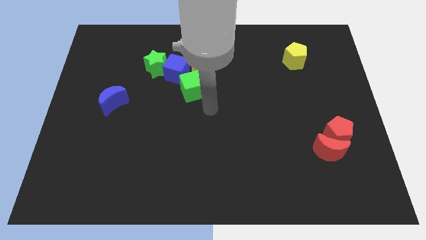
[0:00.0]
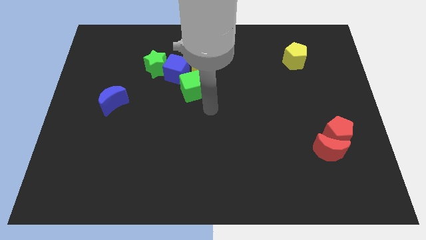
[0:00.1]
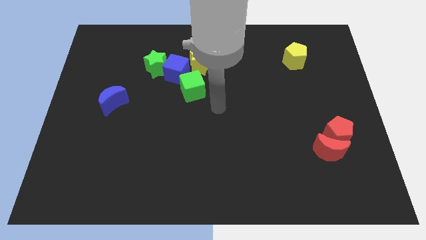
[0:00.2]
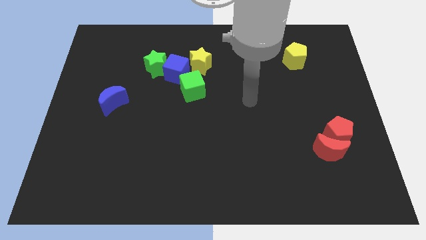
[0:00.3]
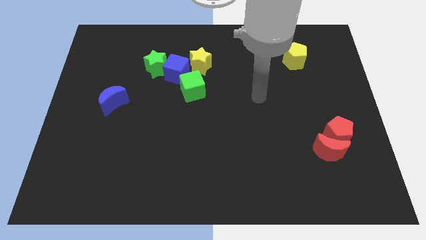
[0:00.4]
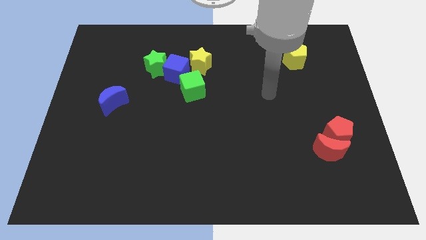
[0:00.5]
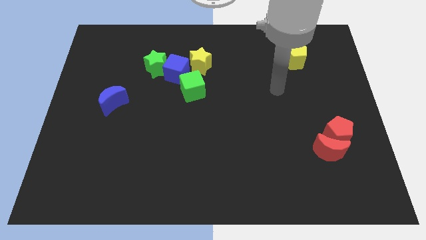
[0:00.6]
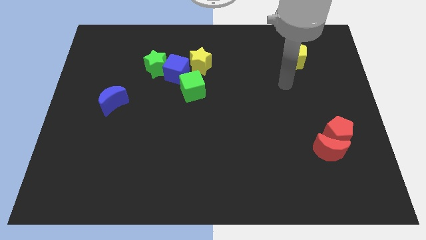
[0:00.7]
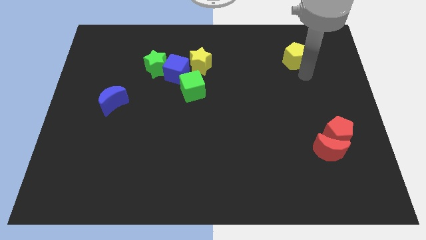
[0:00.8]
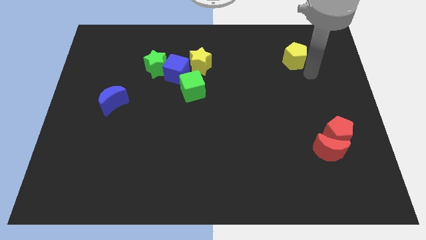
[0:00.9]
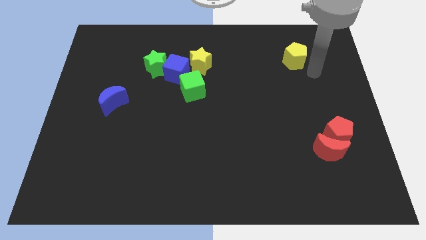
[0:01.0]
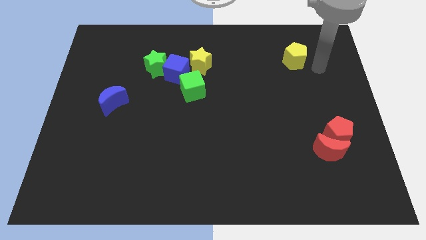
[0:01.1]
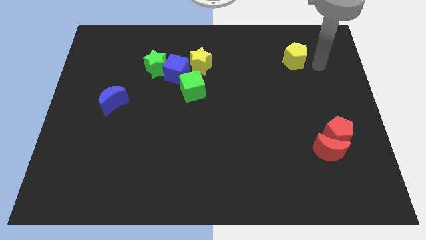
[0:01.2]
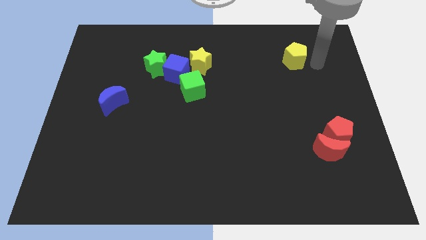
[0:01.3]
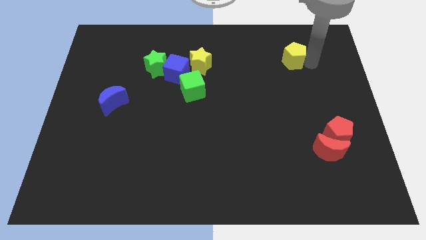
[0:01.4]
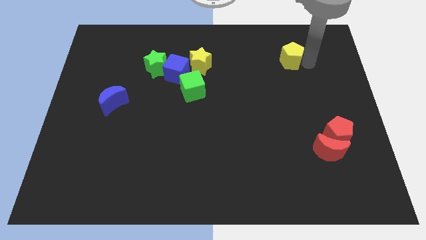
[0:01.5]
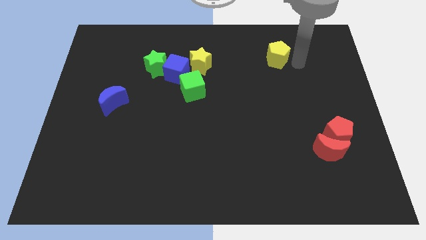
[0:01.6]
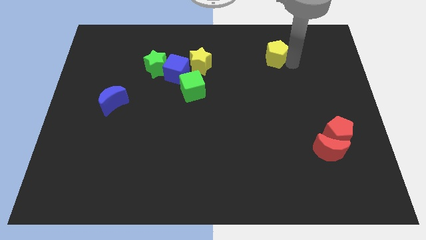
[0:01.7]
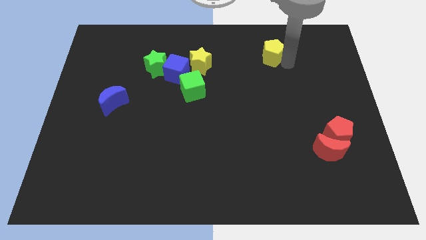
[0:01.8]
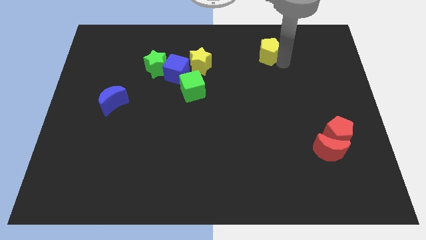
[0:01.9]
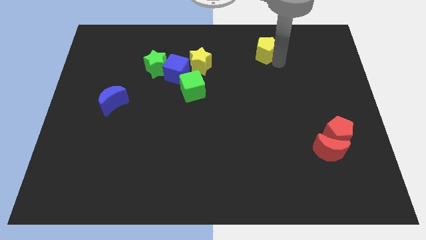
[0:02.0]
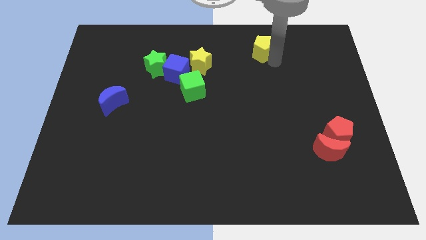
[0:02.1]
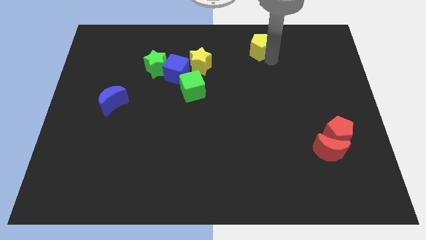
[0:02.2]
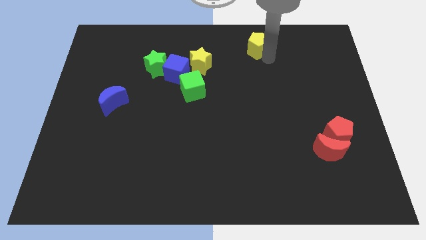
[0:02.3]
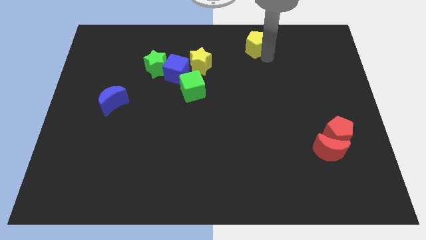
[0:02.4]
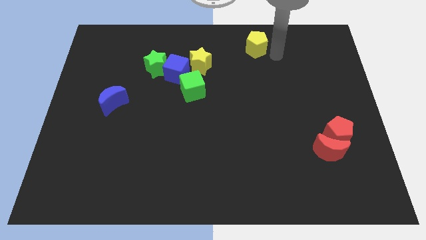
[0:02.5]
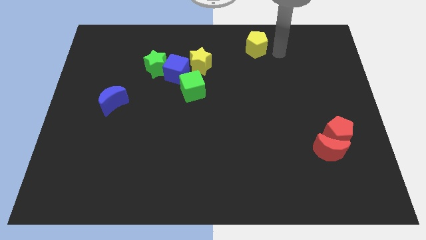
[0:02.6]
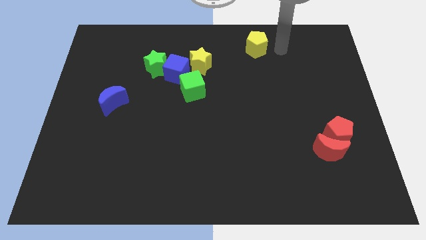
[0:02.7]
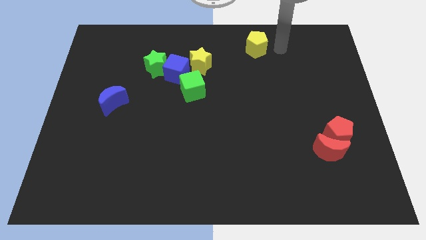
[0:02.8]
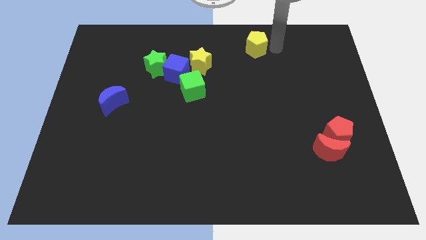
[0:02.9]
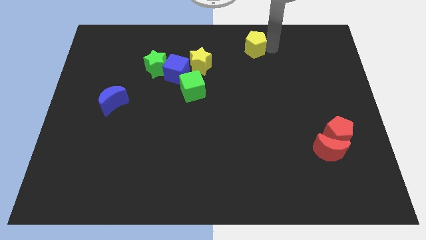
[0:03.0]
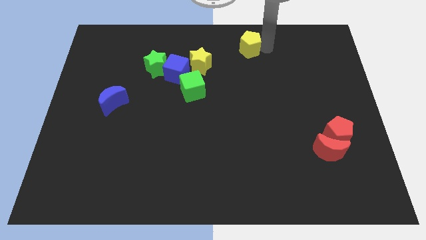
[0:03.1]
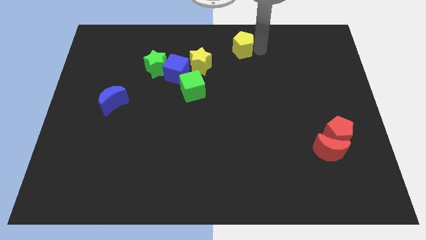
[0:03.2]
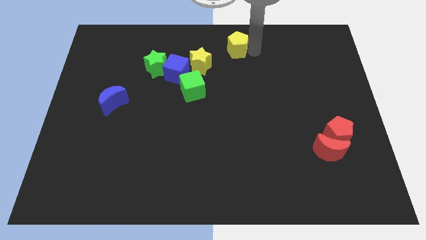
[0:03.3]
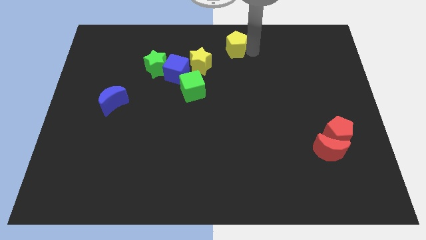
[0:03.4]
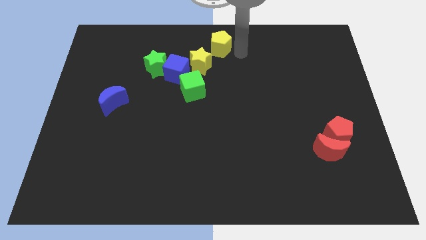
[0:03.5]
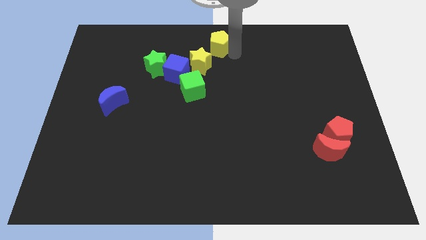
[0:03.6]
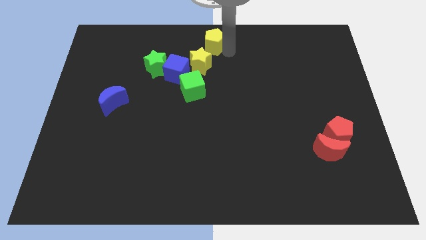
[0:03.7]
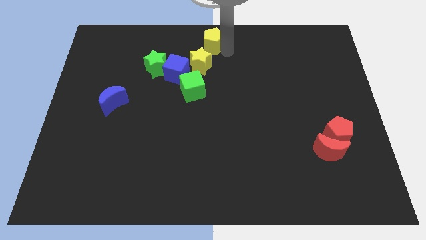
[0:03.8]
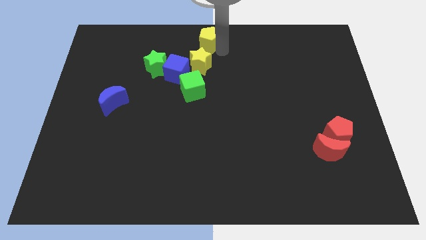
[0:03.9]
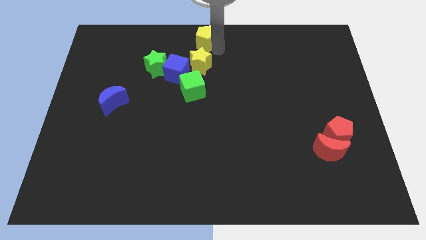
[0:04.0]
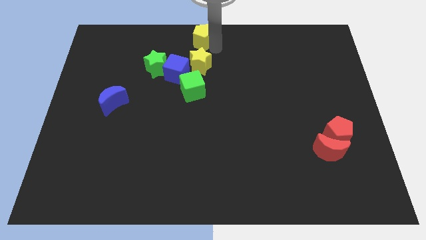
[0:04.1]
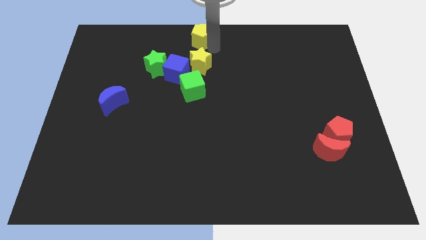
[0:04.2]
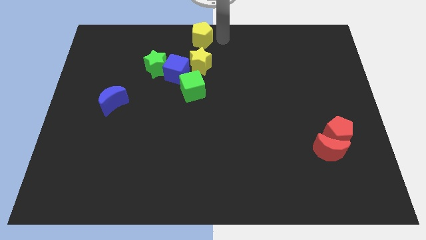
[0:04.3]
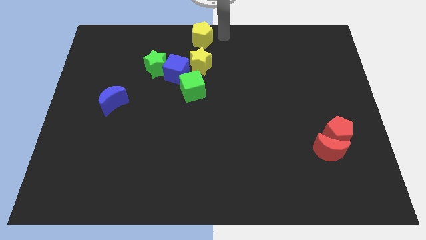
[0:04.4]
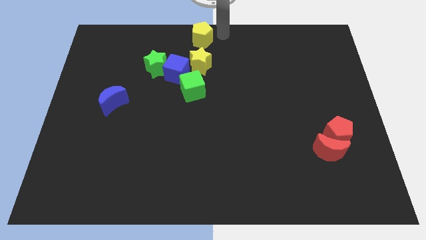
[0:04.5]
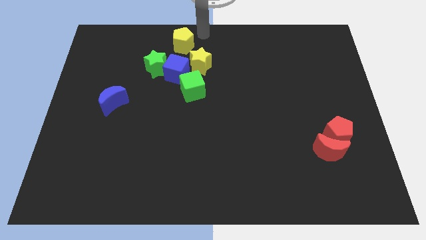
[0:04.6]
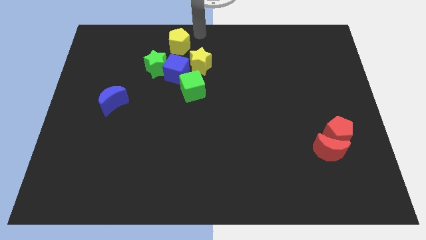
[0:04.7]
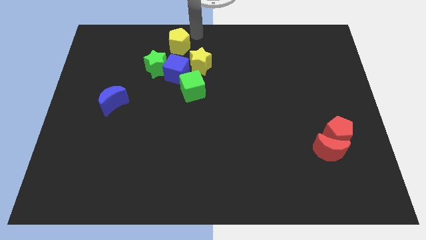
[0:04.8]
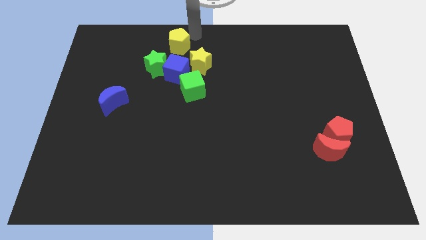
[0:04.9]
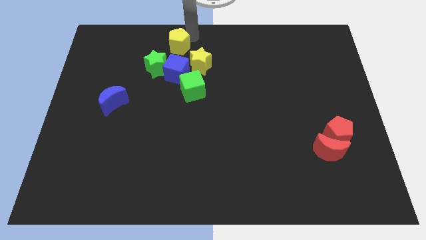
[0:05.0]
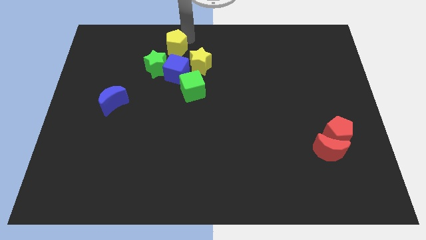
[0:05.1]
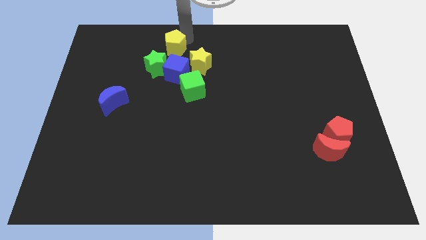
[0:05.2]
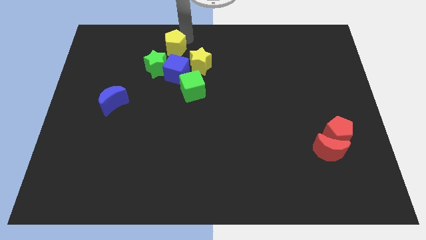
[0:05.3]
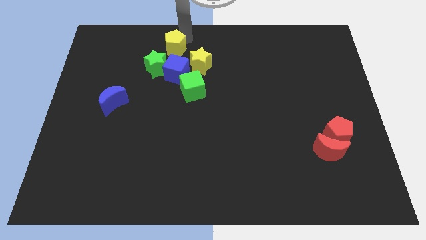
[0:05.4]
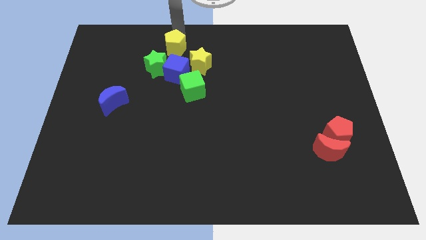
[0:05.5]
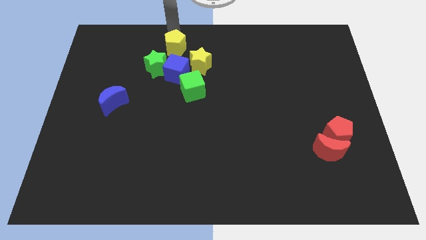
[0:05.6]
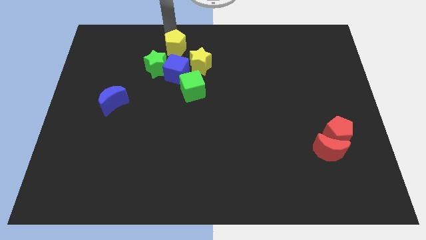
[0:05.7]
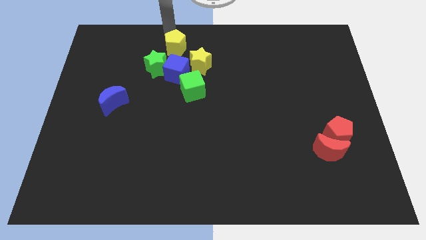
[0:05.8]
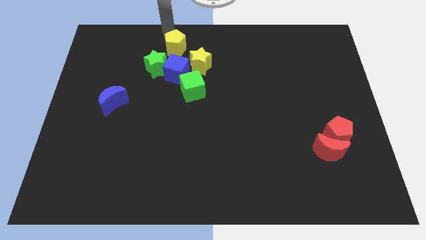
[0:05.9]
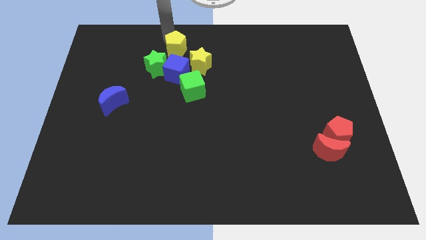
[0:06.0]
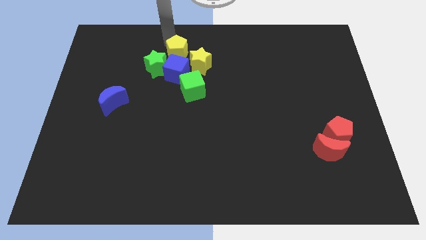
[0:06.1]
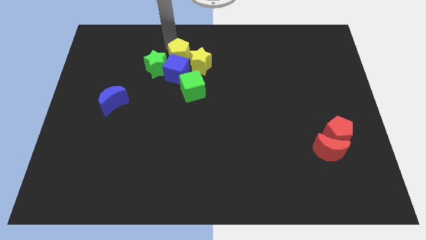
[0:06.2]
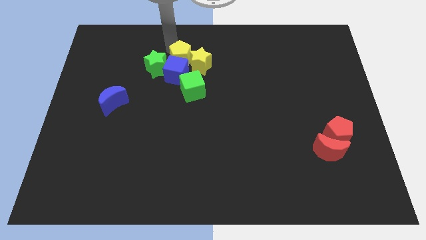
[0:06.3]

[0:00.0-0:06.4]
slide the yellow pentagon close to the blue cube

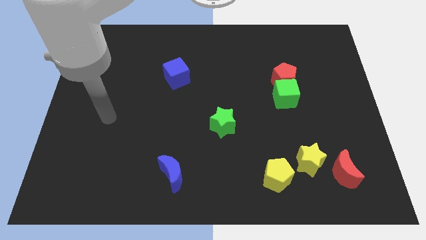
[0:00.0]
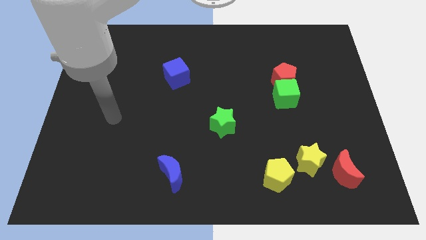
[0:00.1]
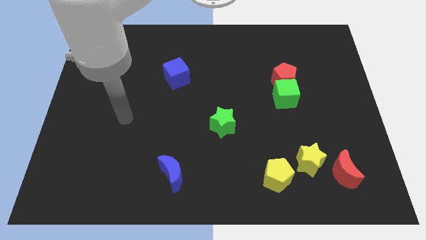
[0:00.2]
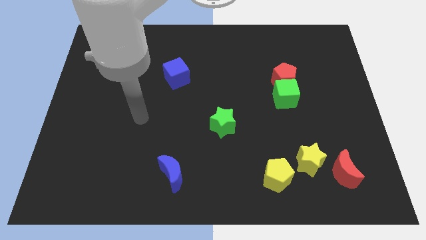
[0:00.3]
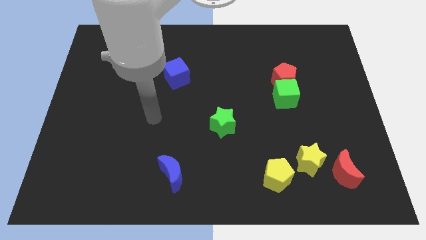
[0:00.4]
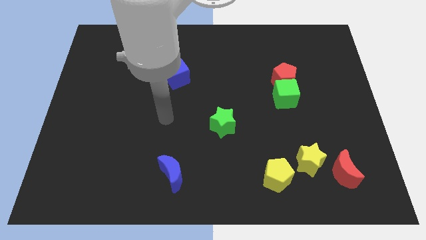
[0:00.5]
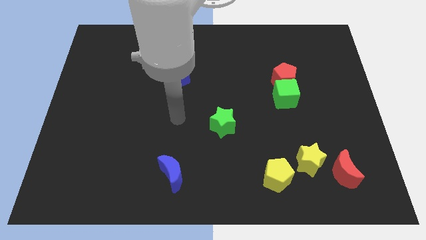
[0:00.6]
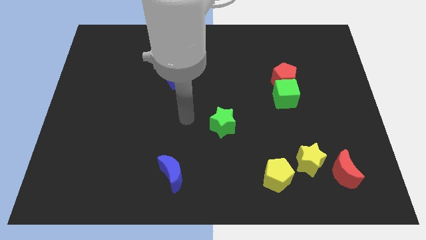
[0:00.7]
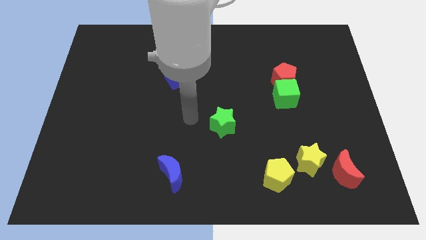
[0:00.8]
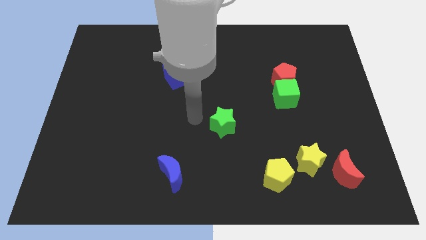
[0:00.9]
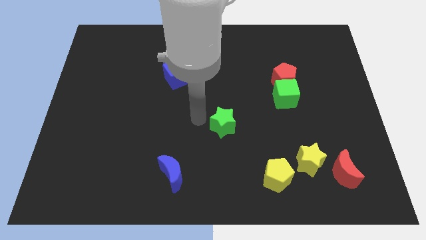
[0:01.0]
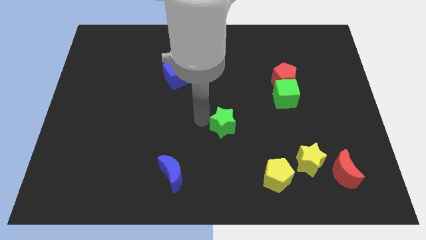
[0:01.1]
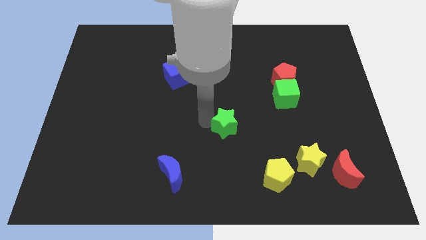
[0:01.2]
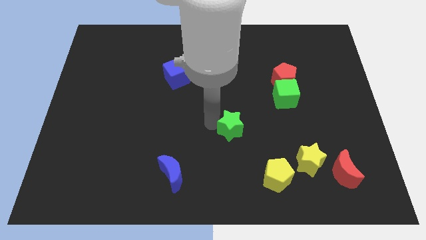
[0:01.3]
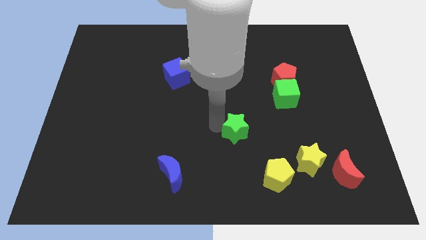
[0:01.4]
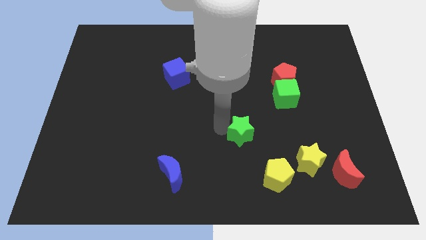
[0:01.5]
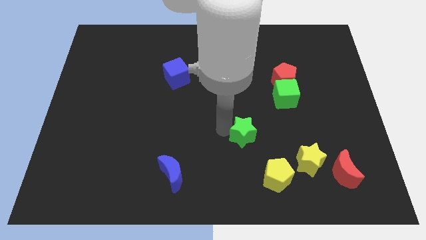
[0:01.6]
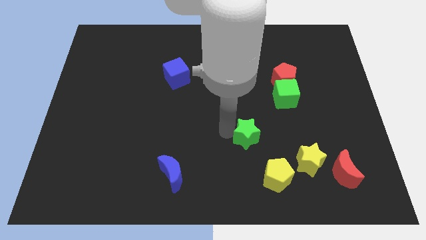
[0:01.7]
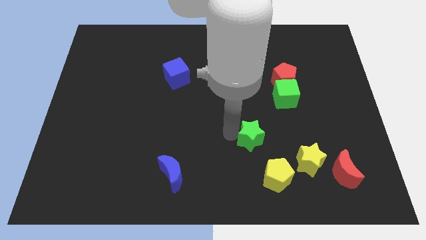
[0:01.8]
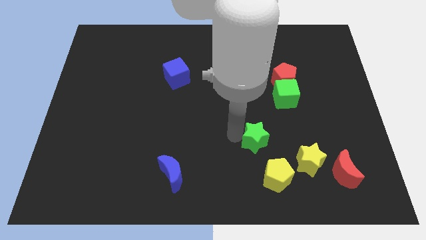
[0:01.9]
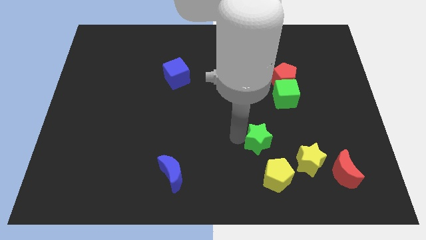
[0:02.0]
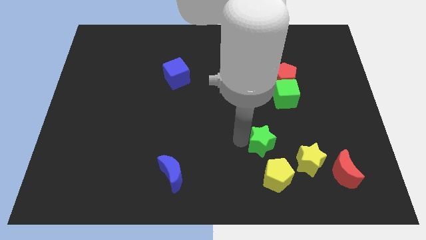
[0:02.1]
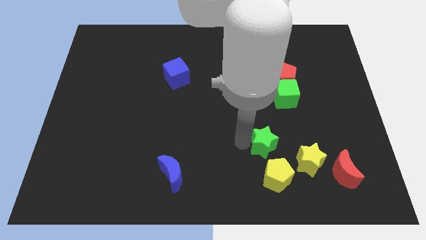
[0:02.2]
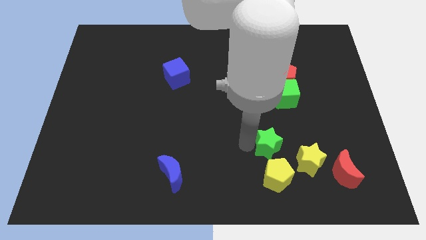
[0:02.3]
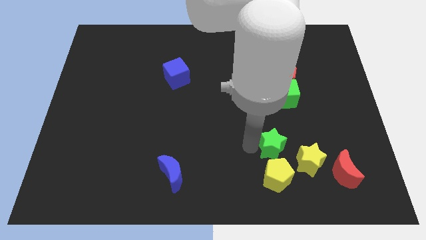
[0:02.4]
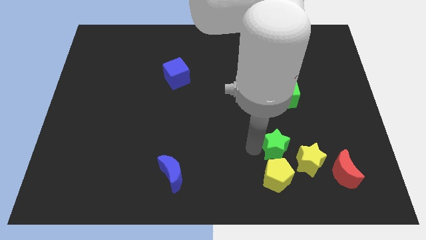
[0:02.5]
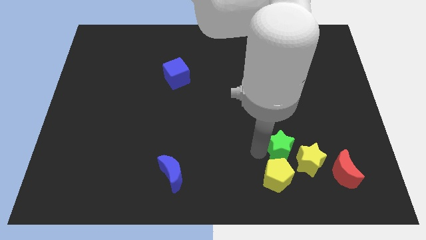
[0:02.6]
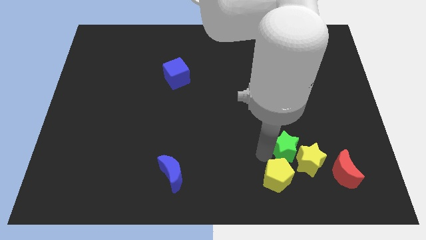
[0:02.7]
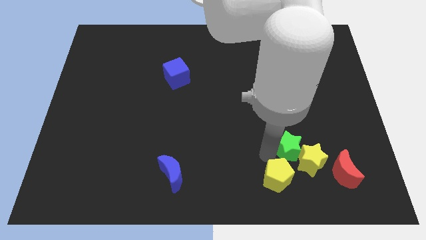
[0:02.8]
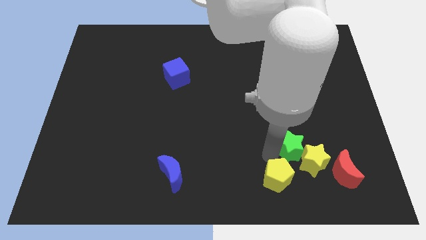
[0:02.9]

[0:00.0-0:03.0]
move the green star towards the yellow star
